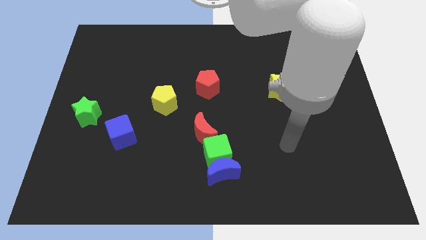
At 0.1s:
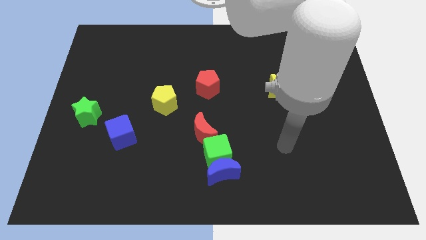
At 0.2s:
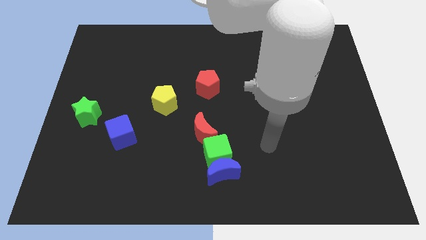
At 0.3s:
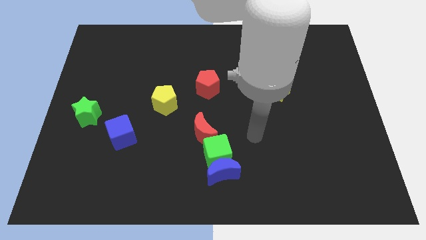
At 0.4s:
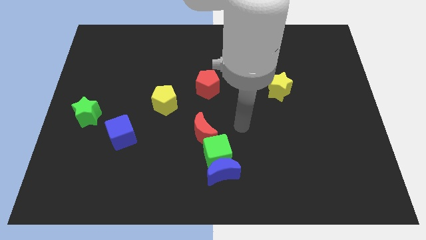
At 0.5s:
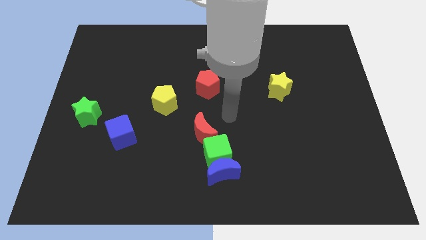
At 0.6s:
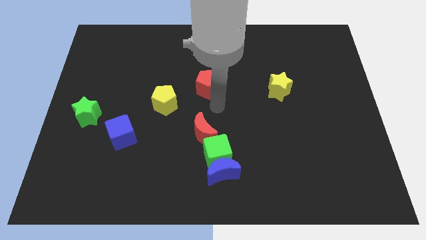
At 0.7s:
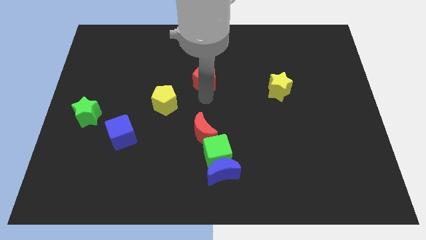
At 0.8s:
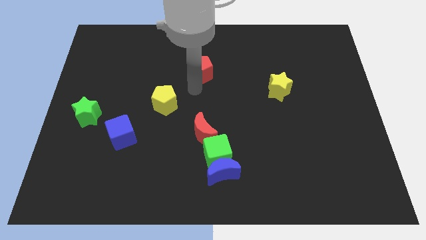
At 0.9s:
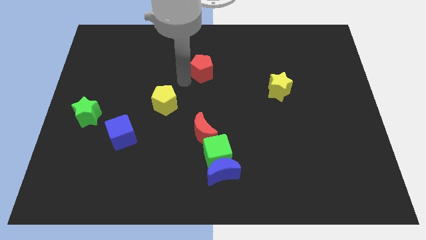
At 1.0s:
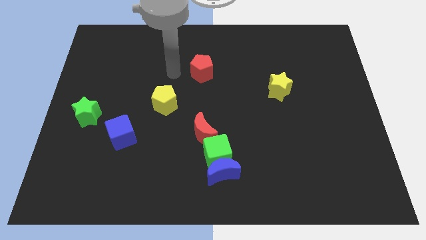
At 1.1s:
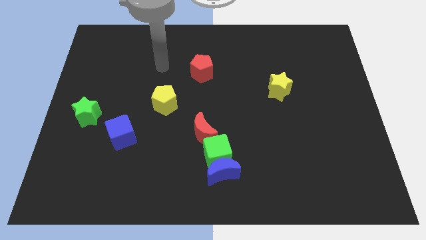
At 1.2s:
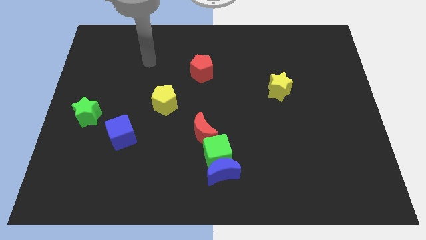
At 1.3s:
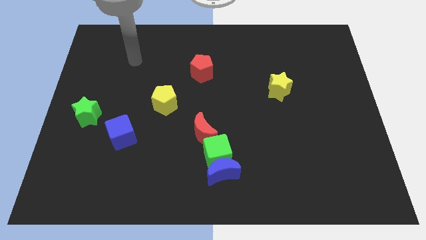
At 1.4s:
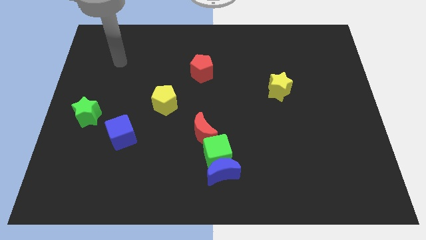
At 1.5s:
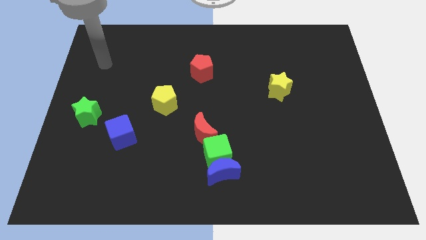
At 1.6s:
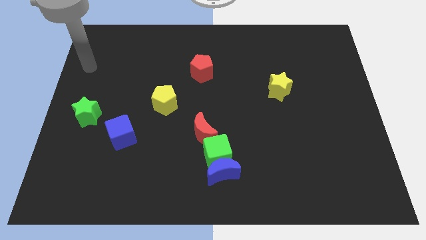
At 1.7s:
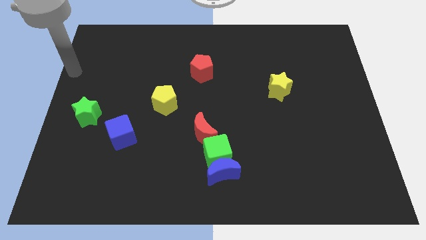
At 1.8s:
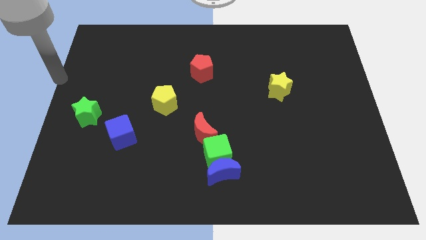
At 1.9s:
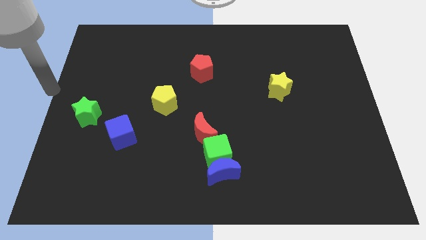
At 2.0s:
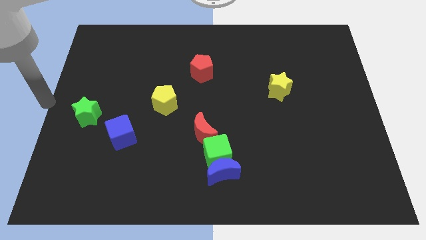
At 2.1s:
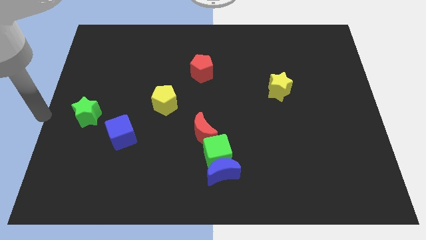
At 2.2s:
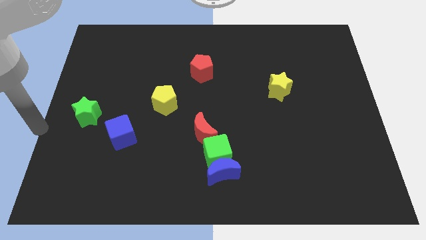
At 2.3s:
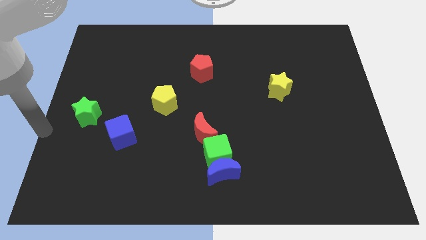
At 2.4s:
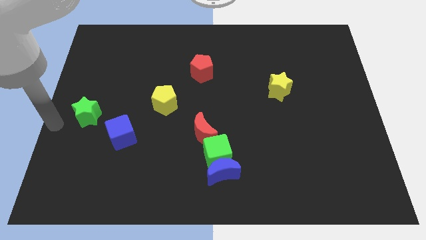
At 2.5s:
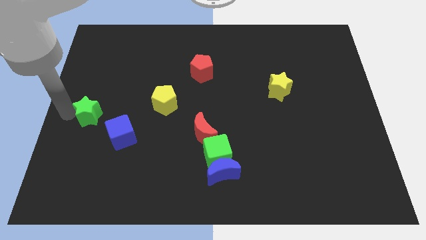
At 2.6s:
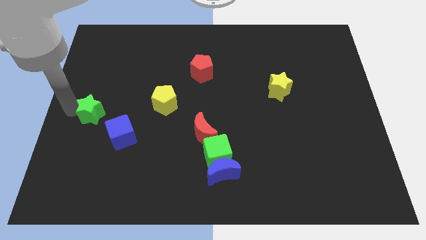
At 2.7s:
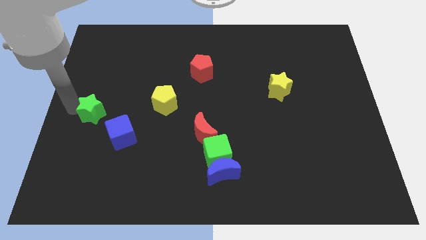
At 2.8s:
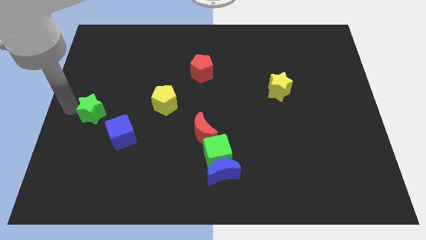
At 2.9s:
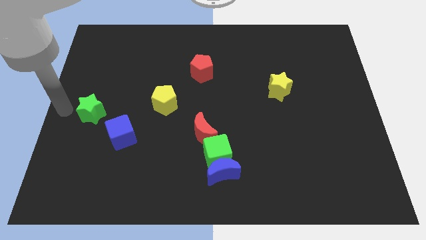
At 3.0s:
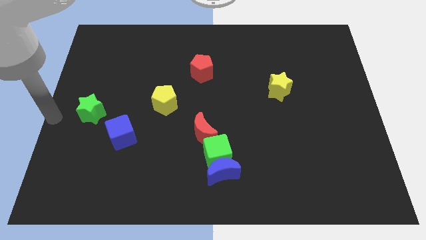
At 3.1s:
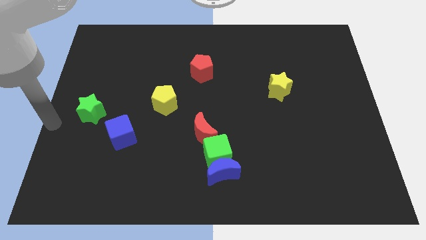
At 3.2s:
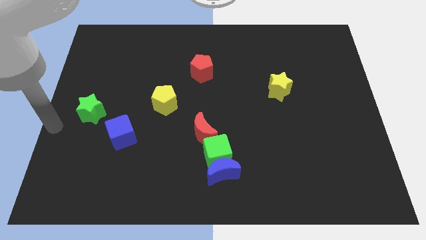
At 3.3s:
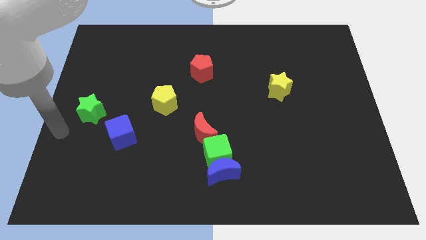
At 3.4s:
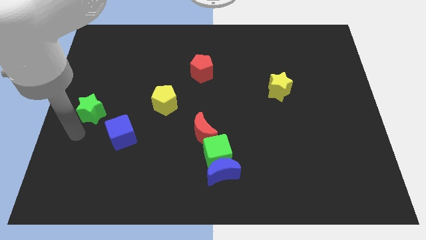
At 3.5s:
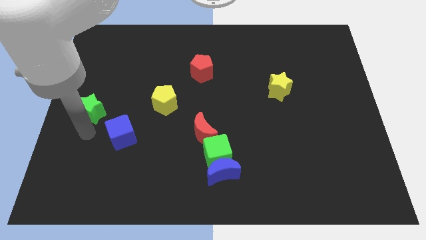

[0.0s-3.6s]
place your hand below green star

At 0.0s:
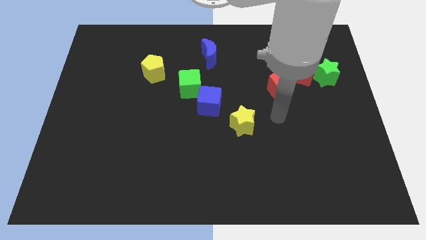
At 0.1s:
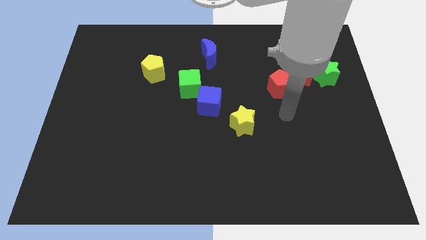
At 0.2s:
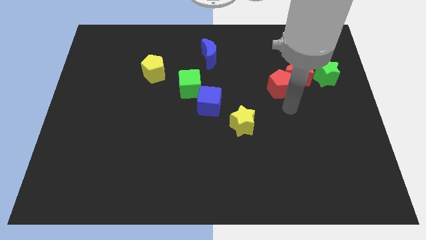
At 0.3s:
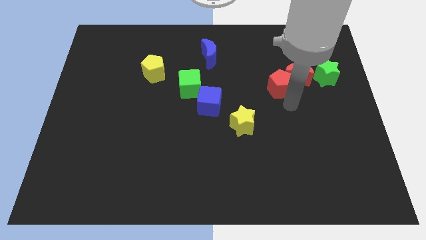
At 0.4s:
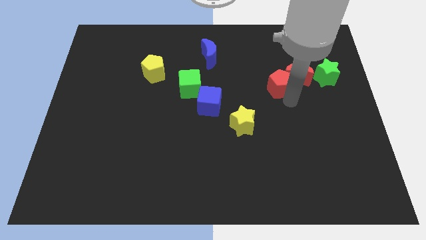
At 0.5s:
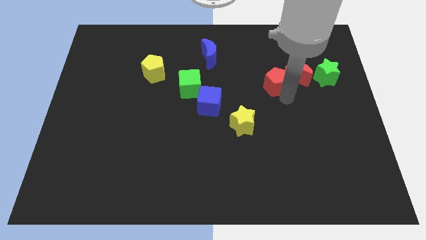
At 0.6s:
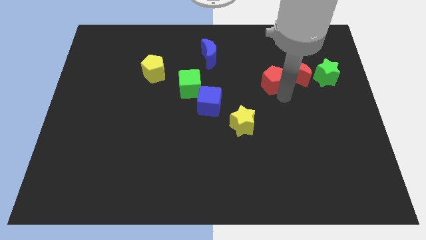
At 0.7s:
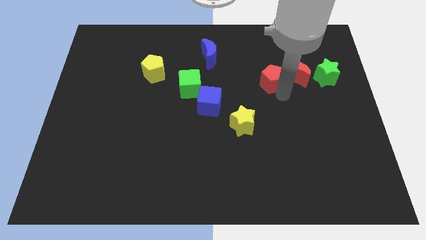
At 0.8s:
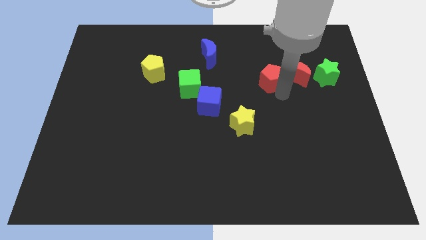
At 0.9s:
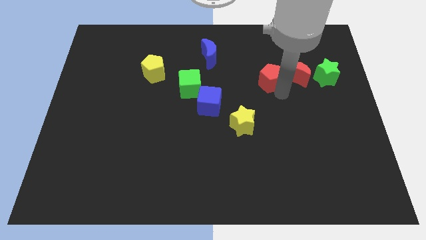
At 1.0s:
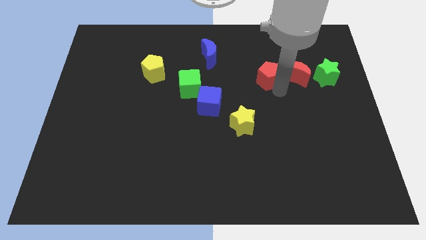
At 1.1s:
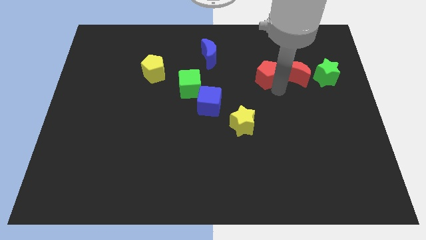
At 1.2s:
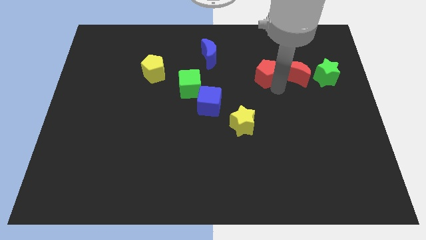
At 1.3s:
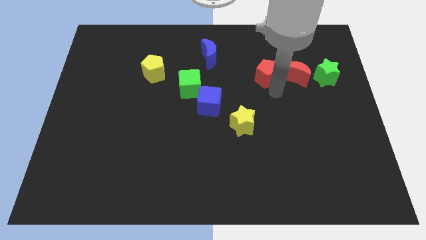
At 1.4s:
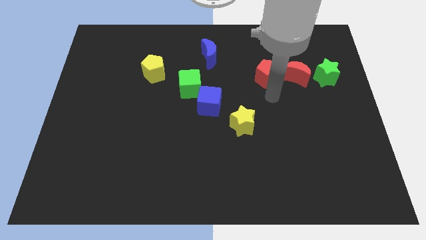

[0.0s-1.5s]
slightly move the red pentagon to the left side of red moon

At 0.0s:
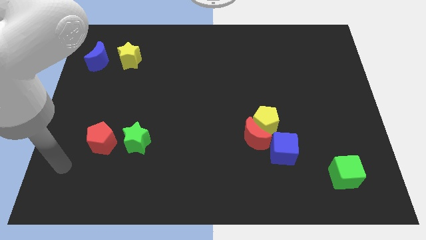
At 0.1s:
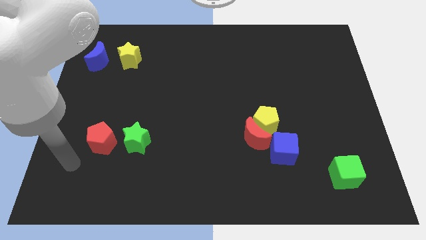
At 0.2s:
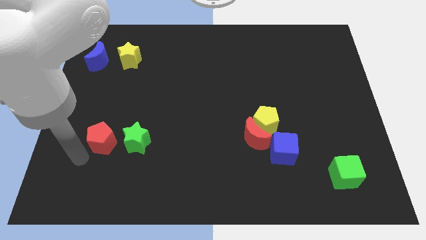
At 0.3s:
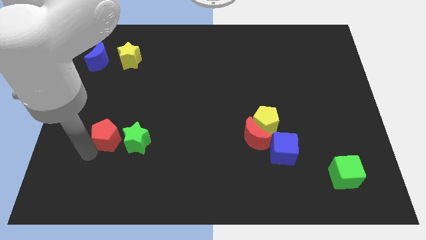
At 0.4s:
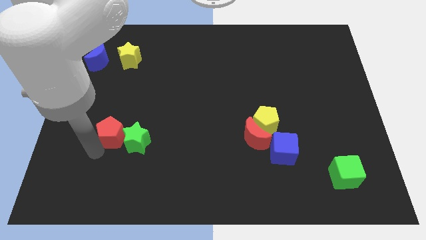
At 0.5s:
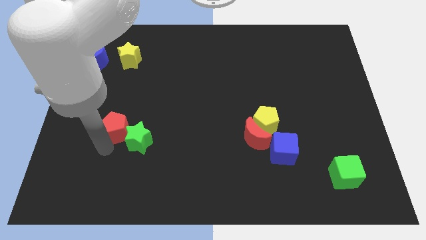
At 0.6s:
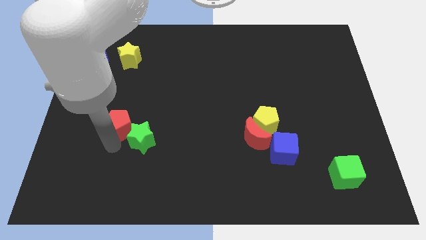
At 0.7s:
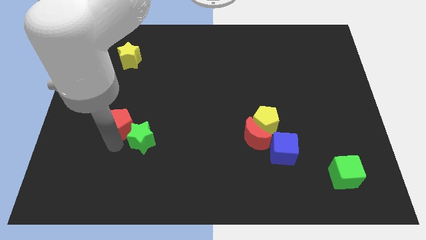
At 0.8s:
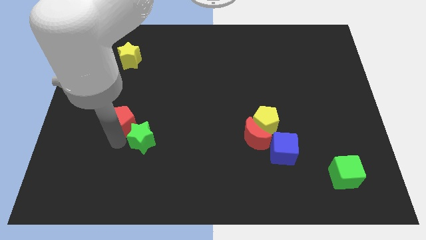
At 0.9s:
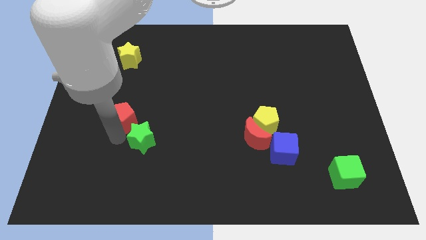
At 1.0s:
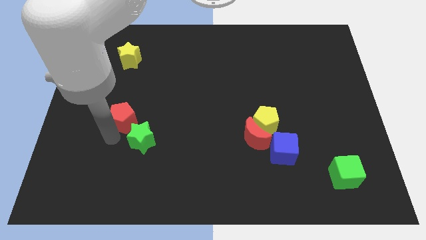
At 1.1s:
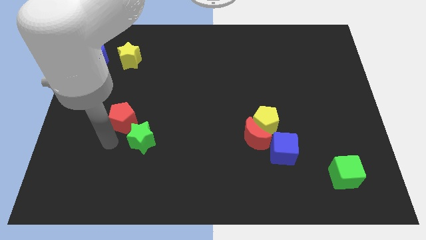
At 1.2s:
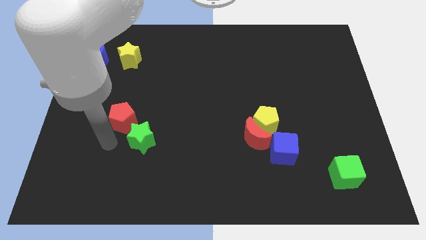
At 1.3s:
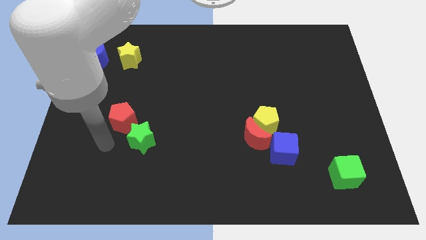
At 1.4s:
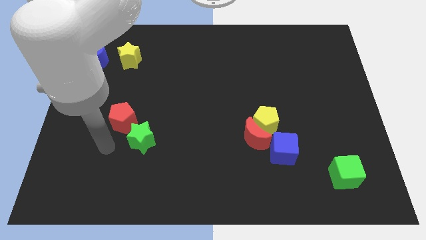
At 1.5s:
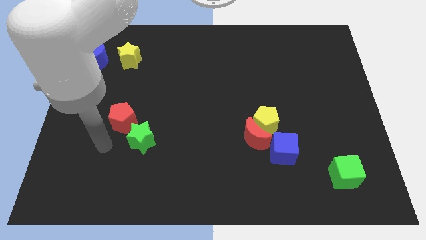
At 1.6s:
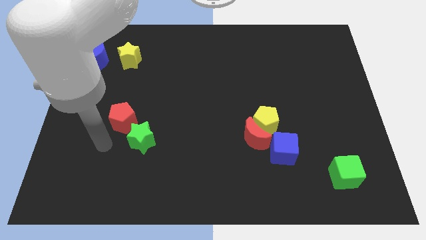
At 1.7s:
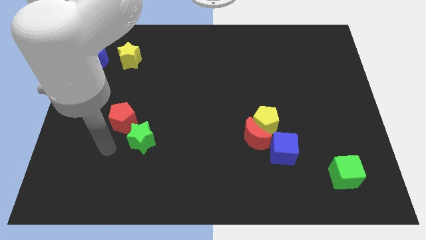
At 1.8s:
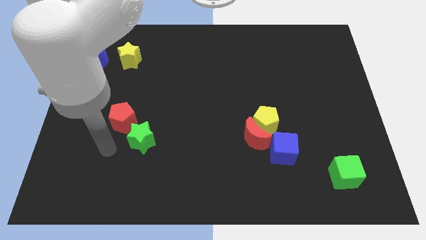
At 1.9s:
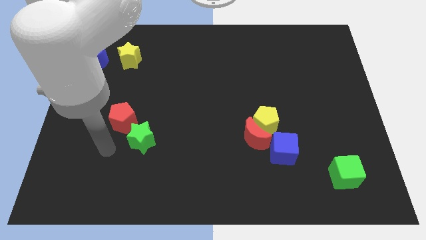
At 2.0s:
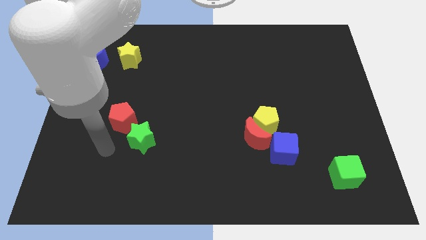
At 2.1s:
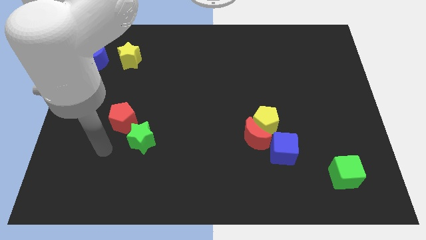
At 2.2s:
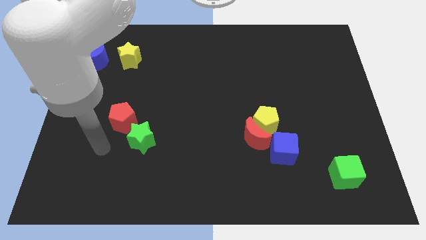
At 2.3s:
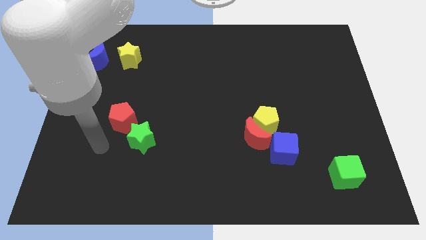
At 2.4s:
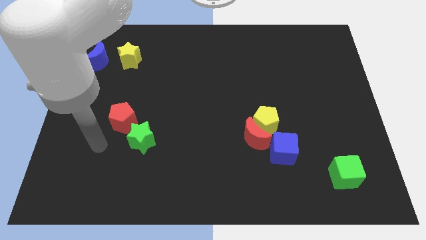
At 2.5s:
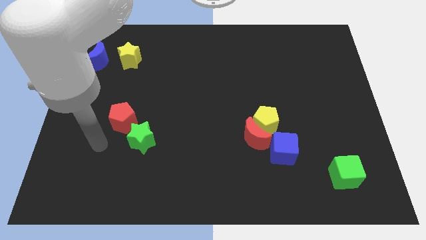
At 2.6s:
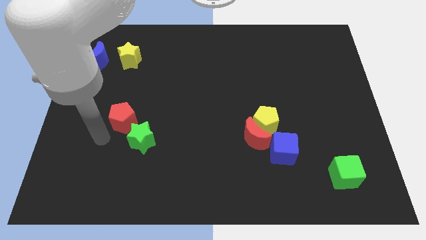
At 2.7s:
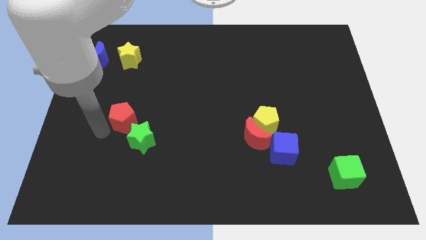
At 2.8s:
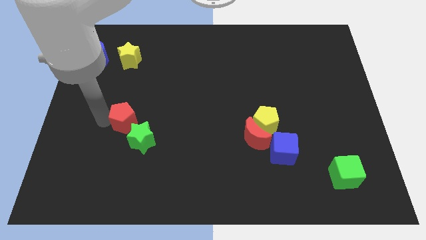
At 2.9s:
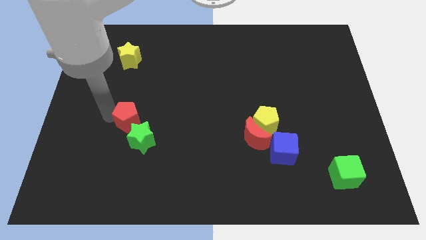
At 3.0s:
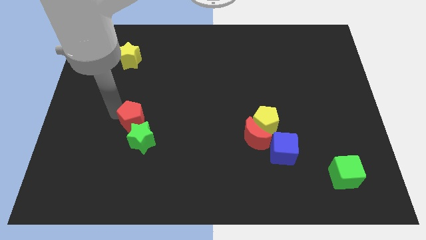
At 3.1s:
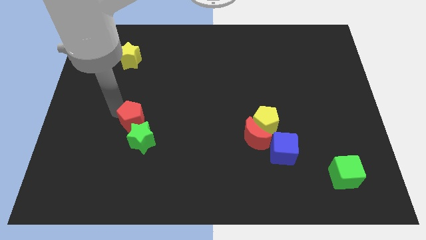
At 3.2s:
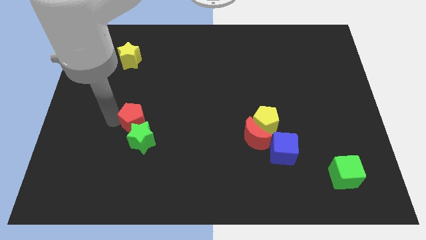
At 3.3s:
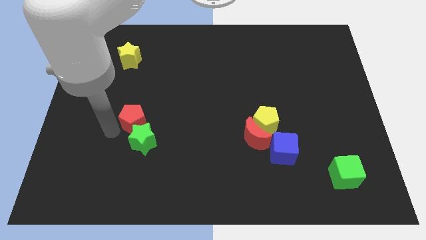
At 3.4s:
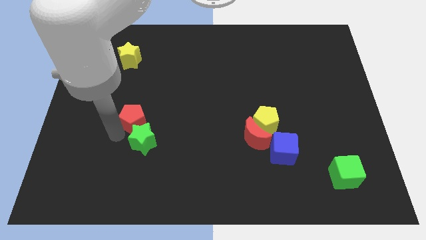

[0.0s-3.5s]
place red pentagon diagonally left to green star

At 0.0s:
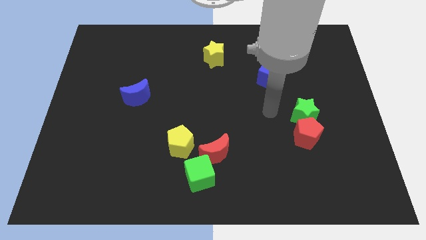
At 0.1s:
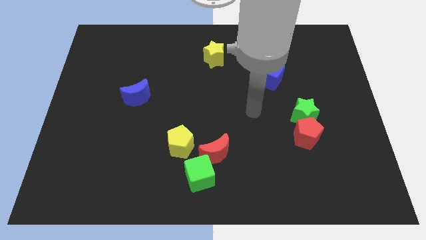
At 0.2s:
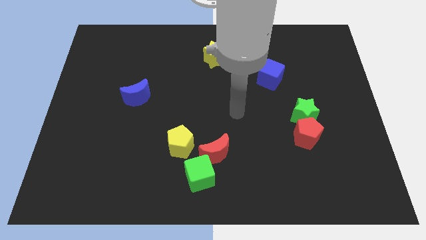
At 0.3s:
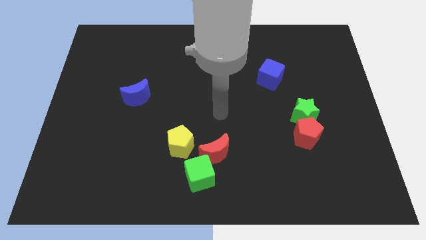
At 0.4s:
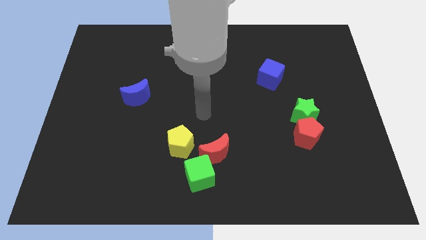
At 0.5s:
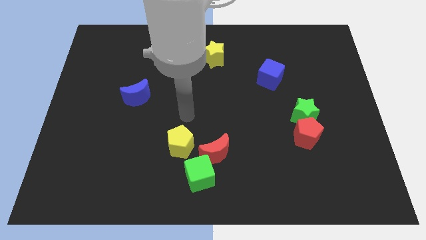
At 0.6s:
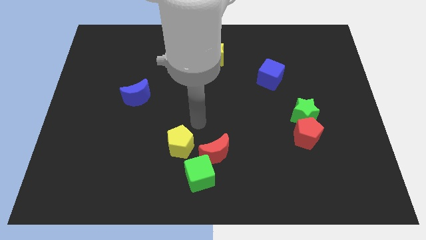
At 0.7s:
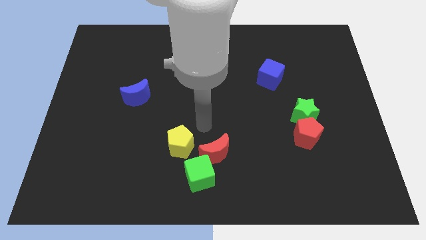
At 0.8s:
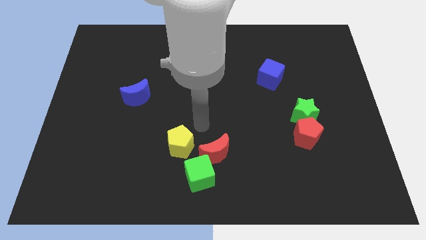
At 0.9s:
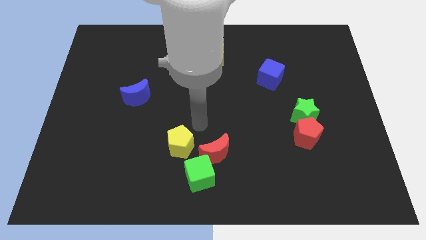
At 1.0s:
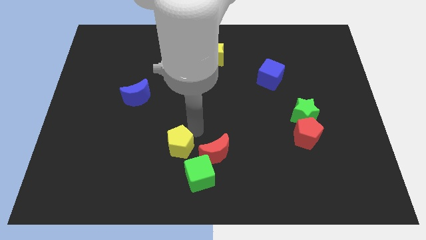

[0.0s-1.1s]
touch the top of yellow pentagon
